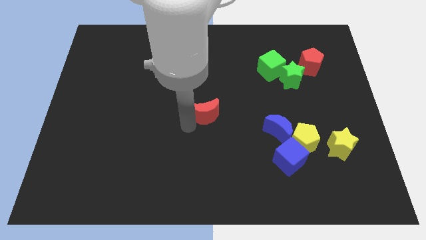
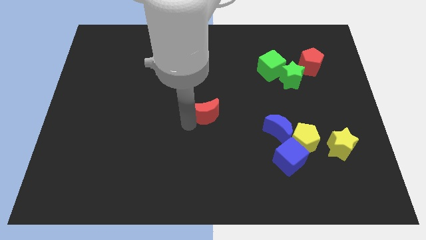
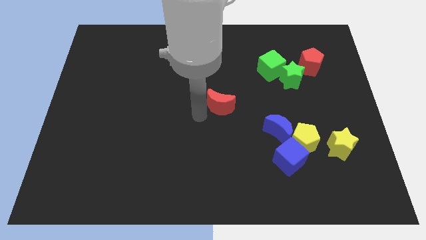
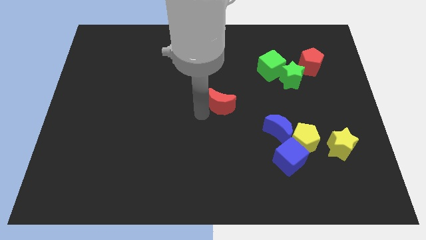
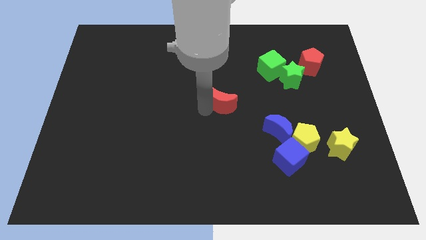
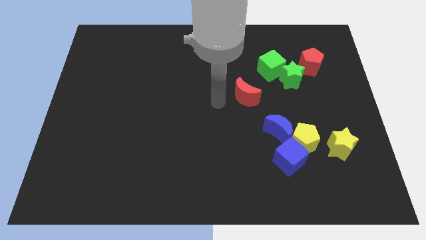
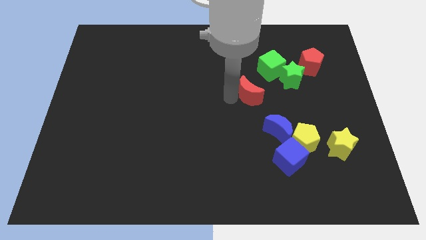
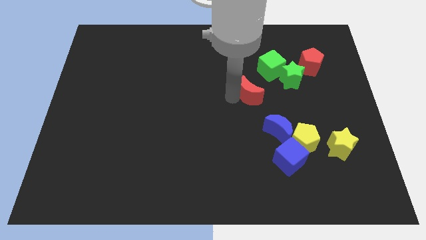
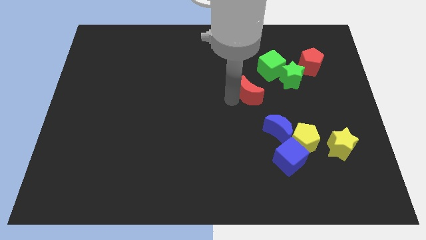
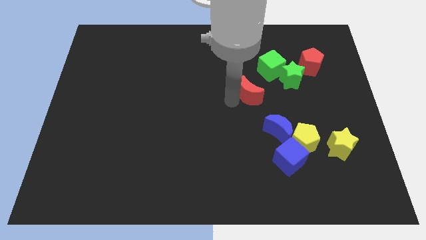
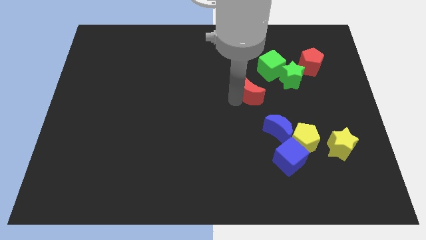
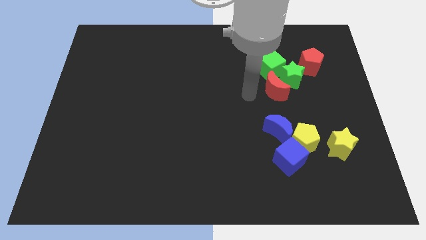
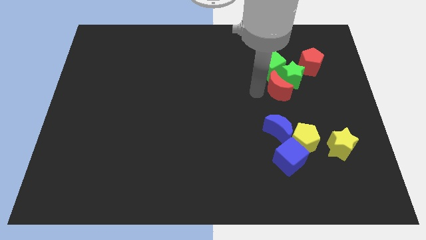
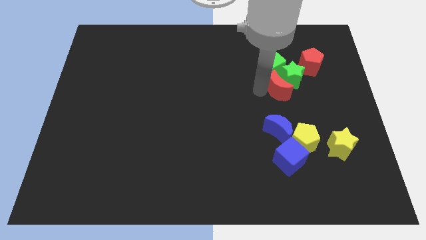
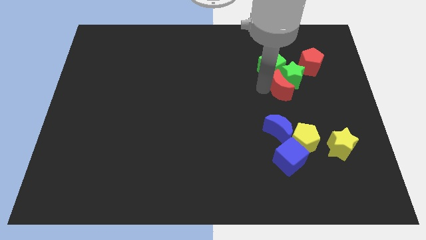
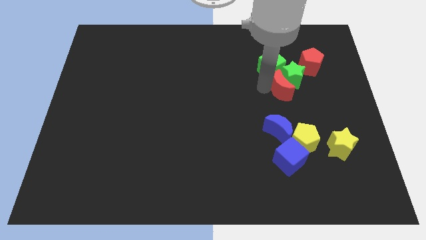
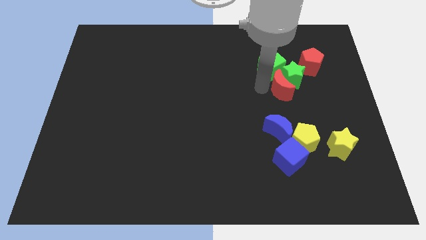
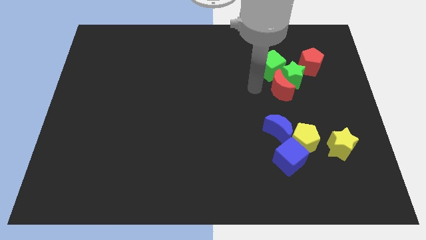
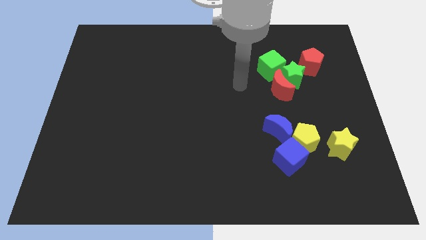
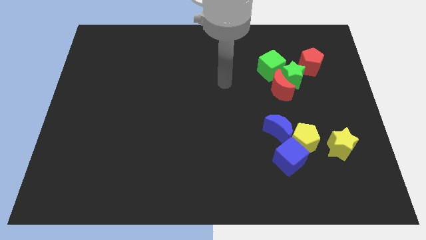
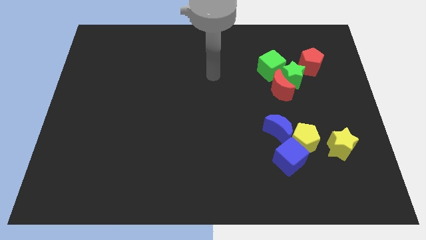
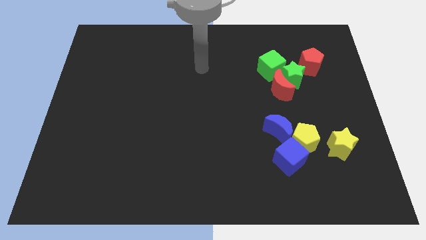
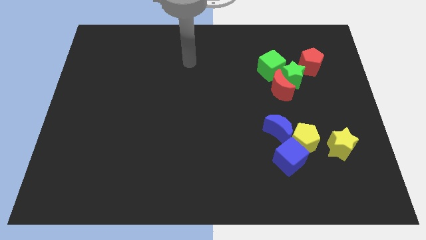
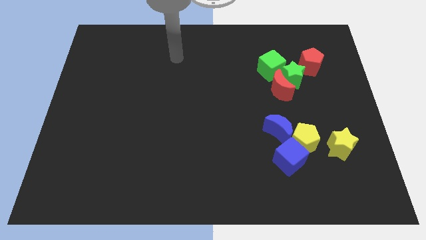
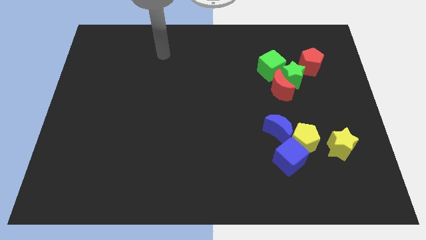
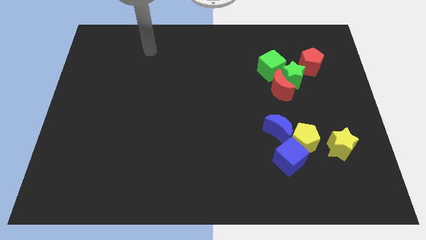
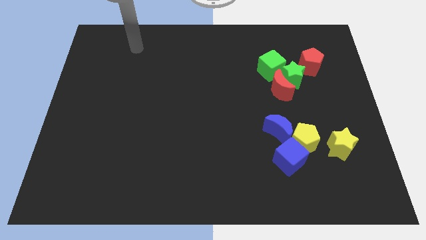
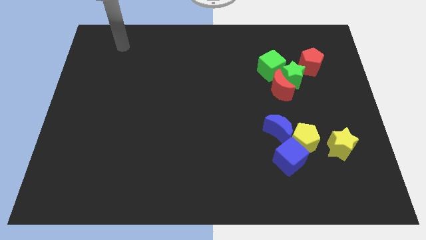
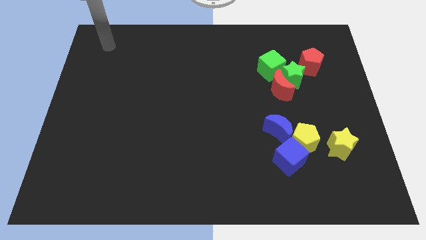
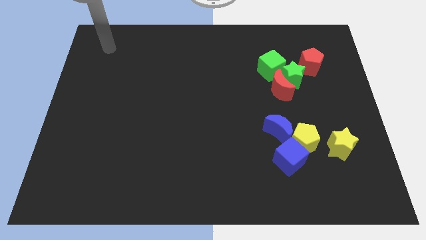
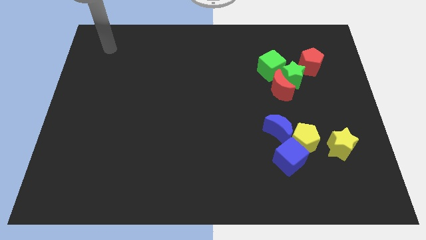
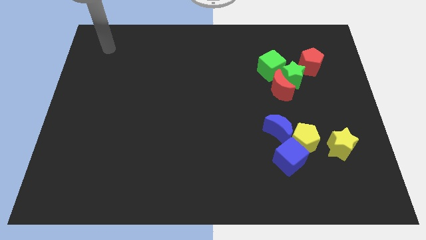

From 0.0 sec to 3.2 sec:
place the red crescent close to the green star

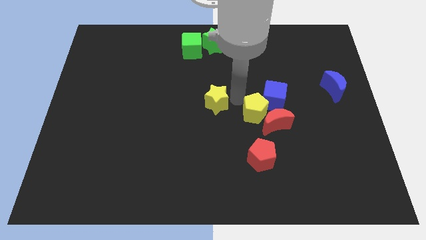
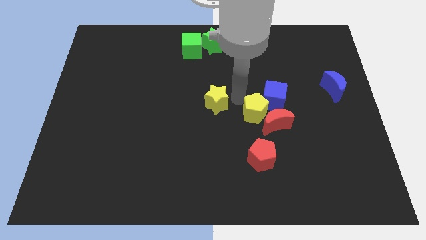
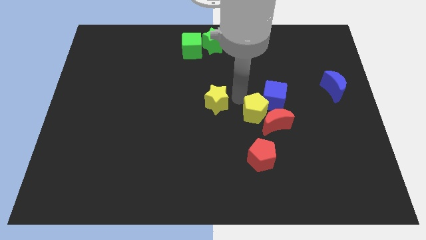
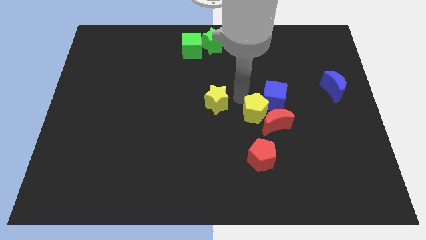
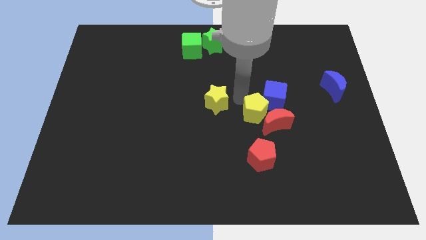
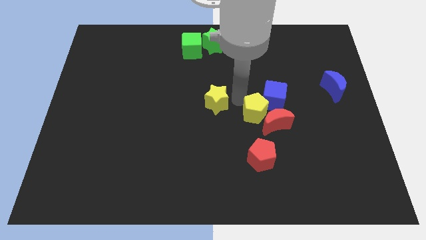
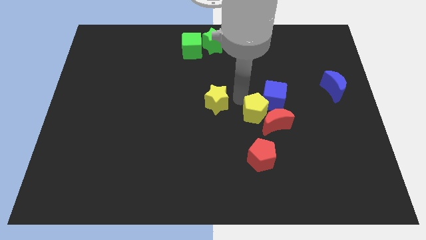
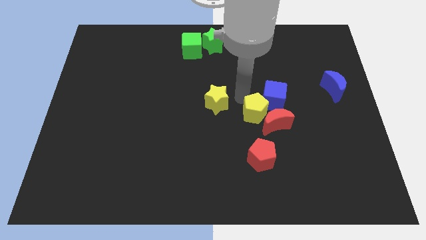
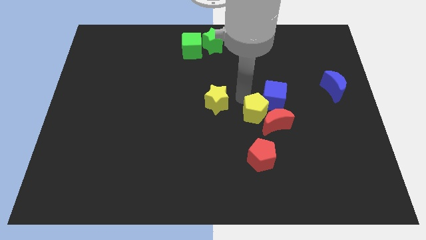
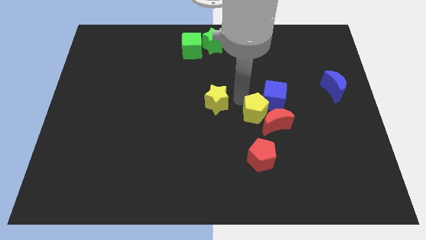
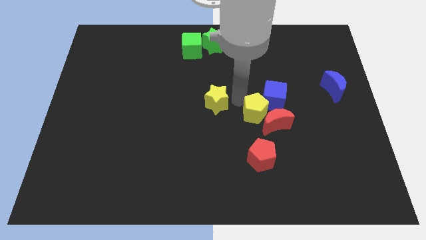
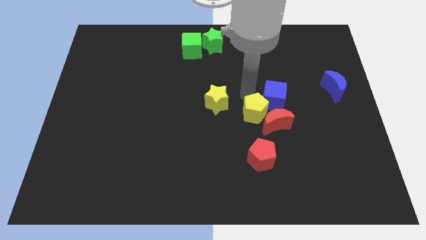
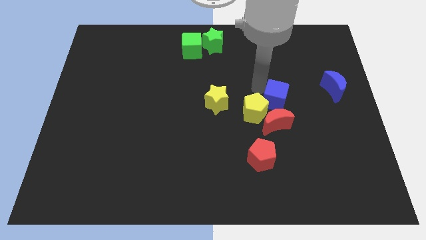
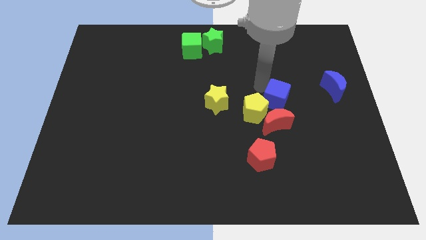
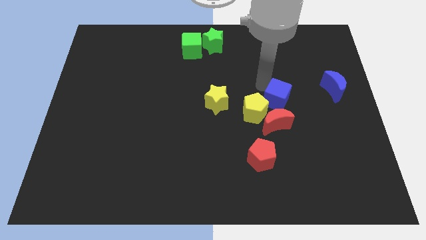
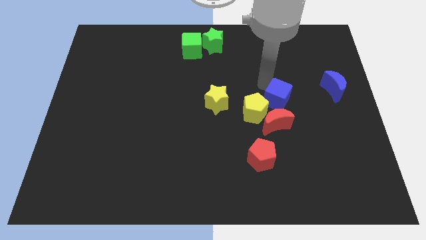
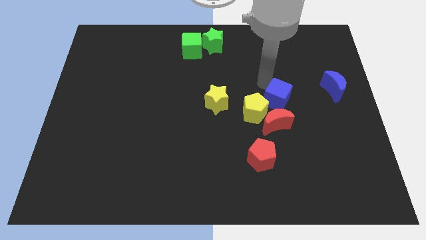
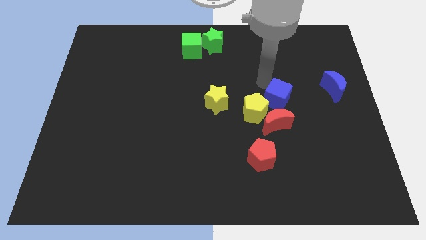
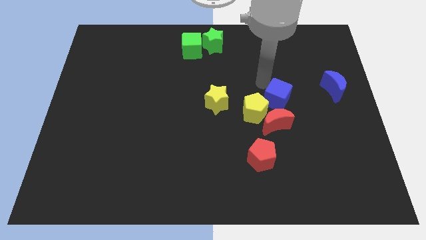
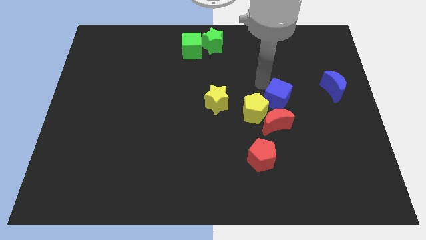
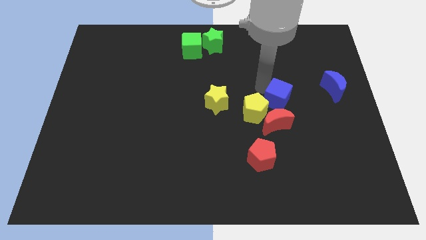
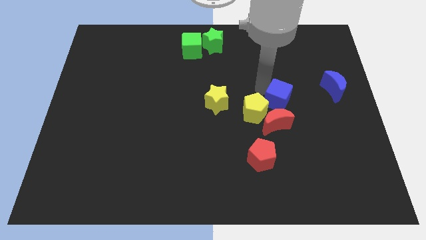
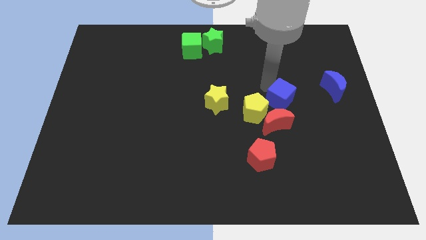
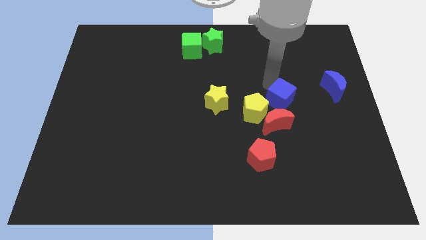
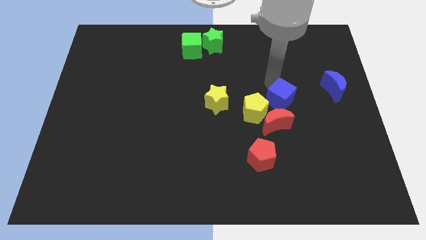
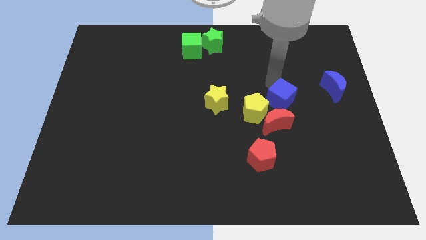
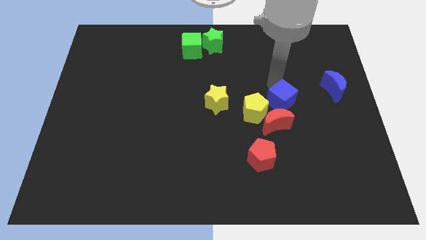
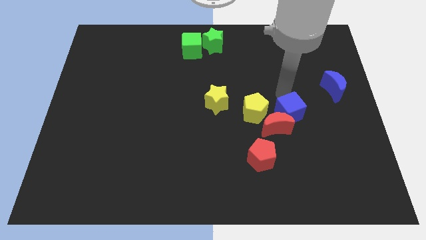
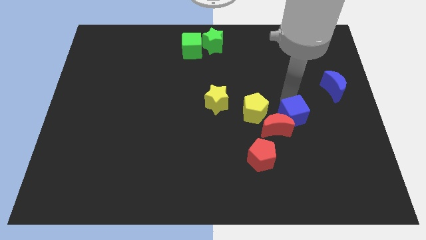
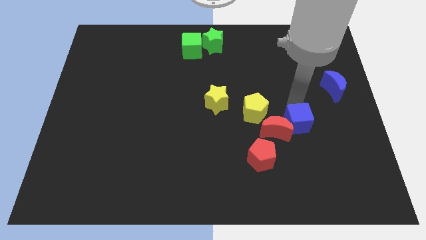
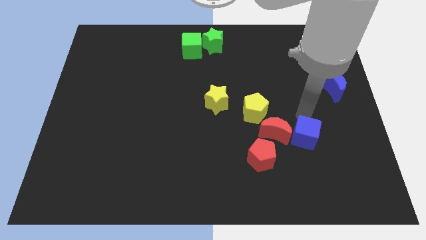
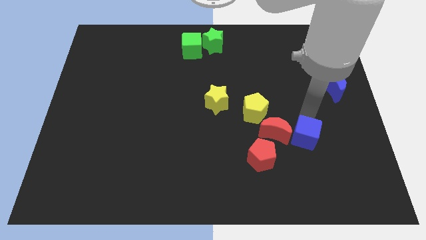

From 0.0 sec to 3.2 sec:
put the blue cube parallel right to the red moon

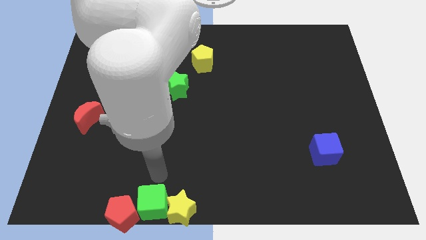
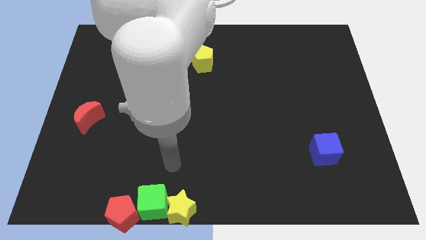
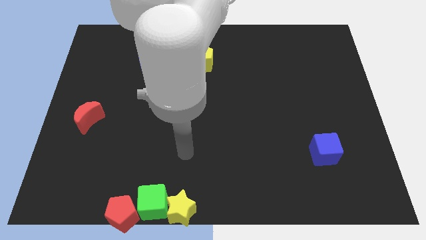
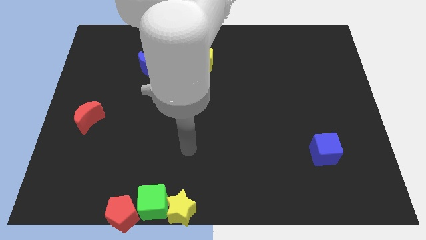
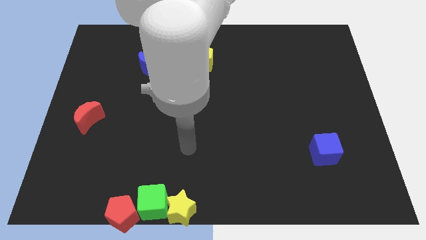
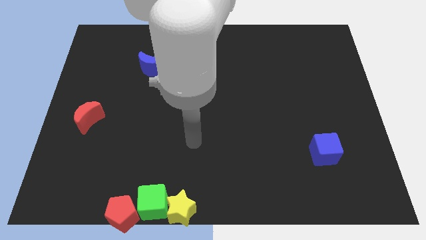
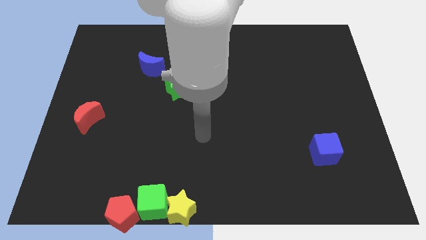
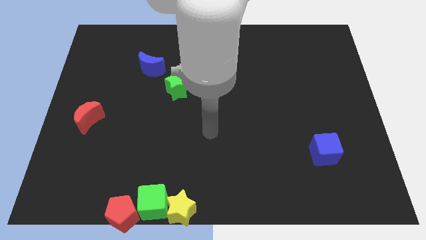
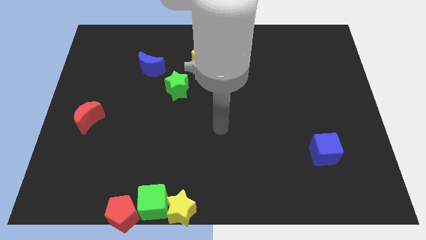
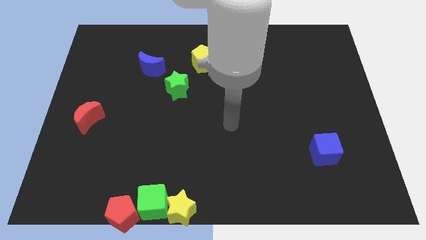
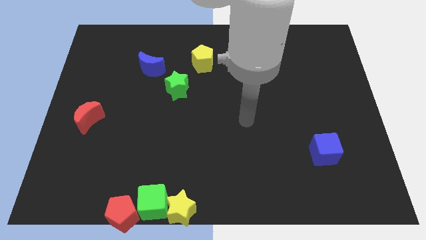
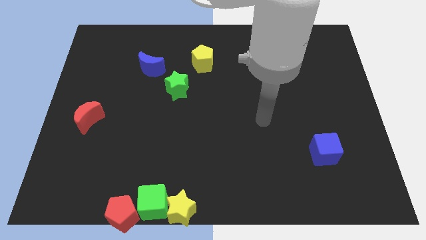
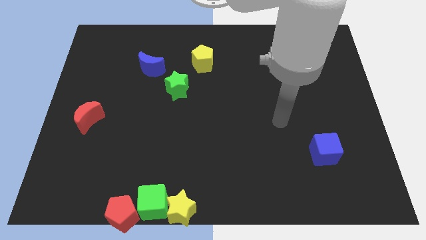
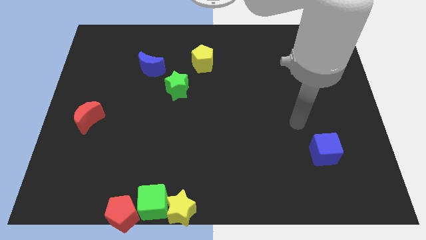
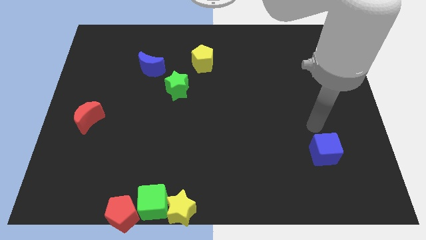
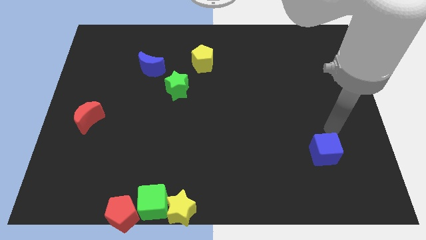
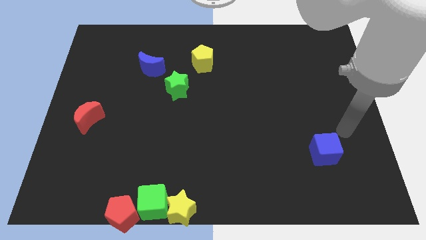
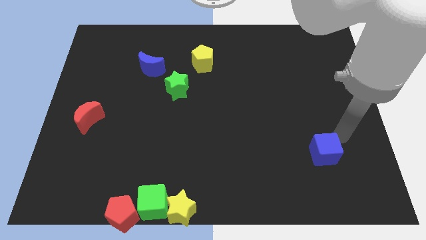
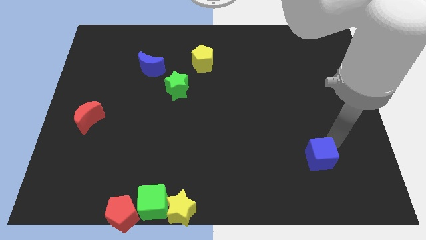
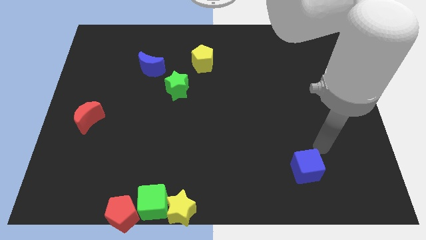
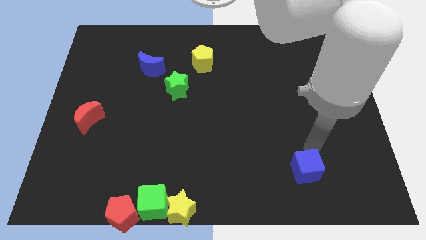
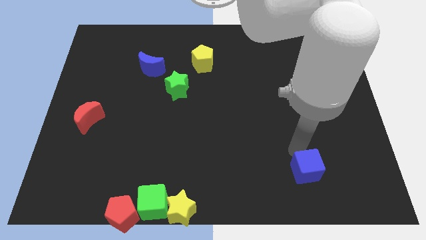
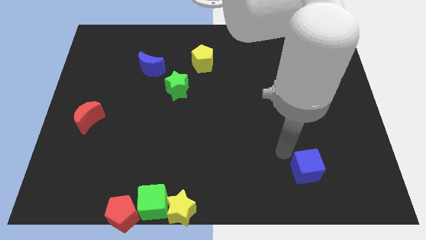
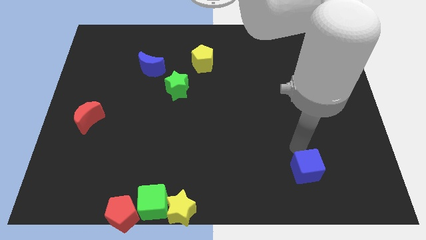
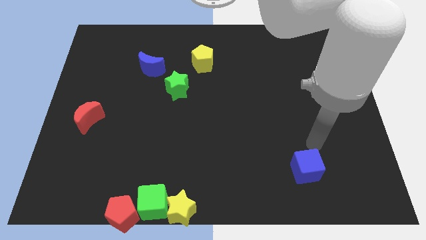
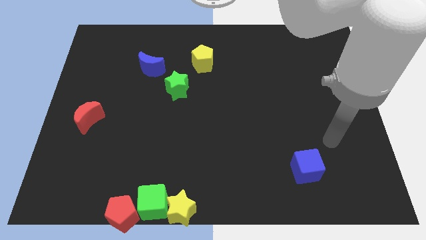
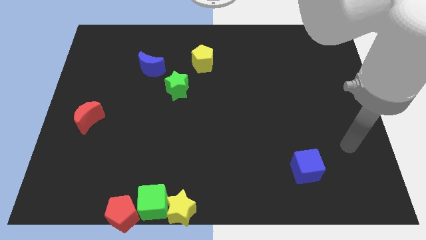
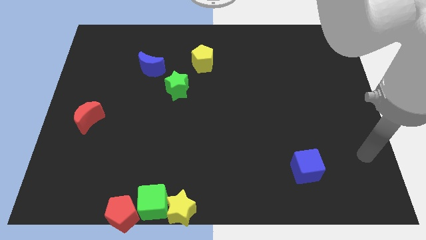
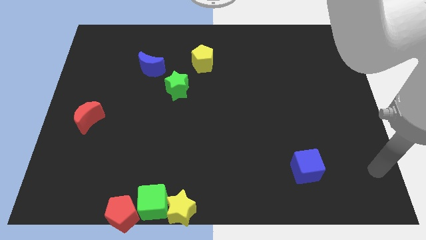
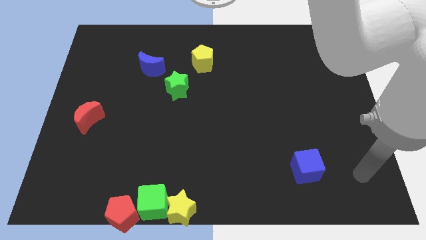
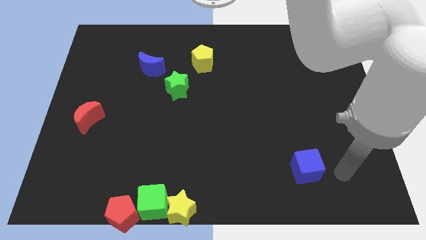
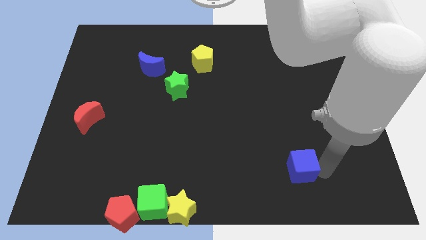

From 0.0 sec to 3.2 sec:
drag the blue cube towards the bottom center of the board
